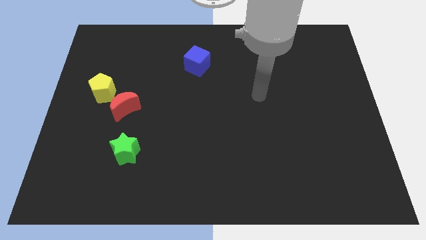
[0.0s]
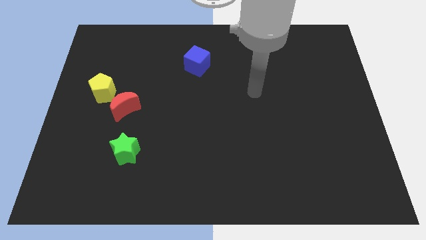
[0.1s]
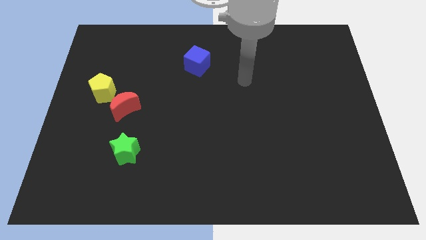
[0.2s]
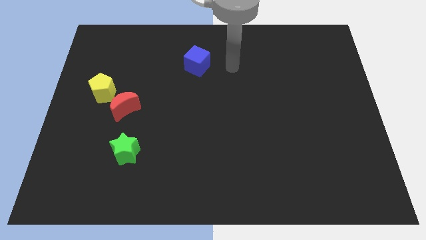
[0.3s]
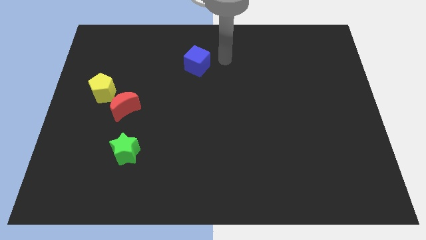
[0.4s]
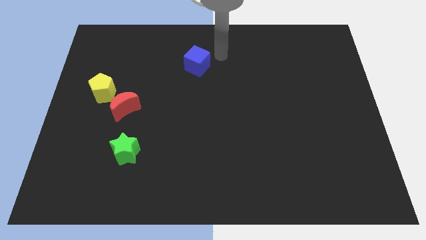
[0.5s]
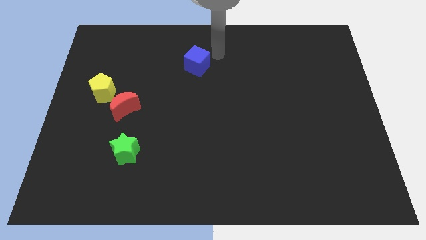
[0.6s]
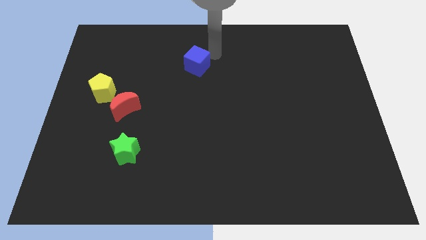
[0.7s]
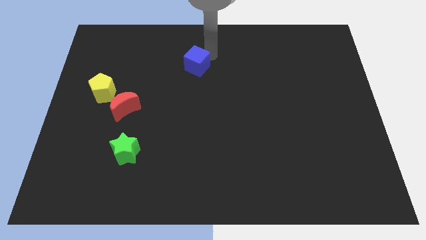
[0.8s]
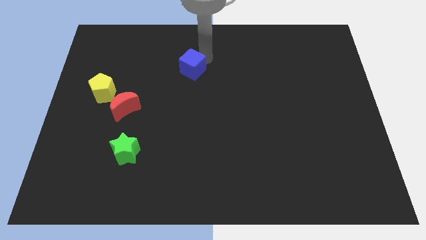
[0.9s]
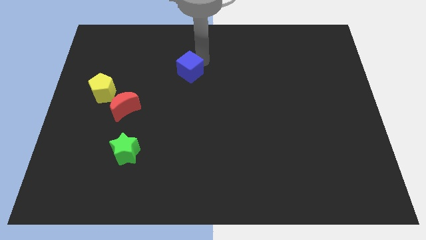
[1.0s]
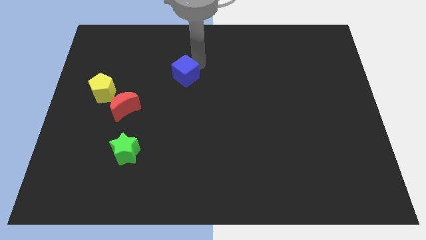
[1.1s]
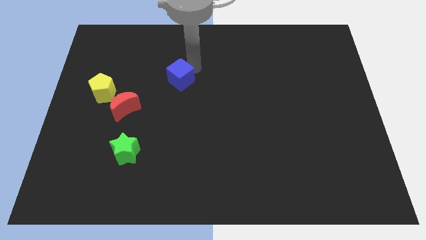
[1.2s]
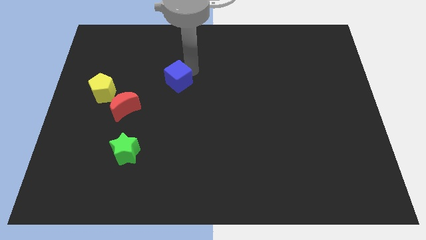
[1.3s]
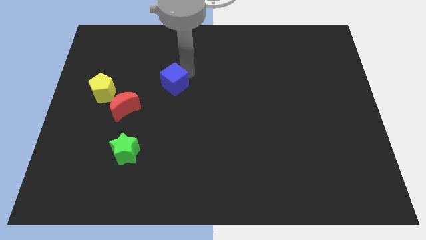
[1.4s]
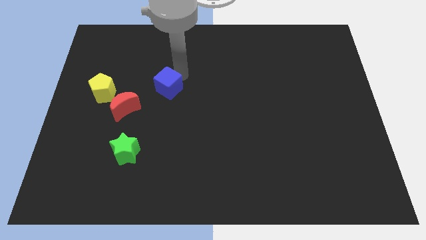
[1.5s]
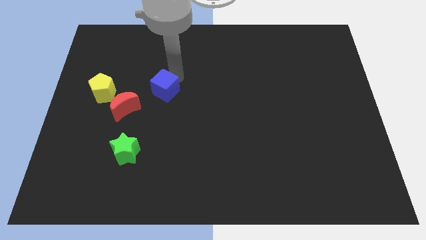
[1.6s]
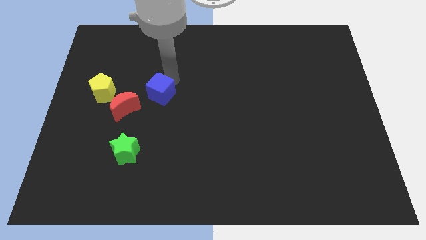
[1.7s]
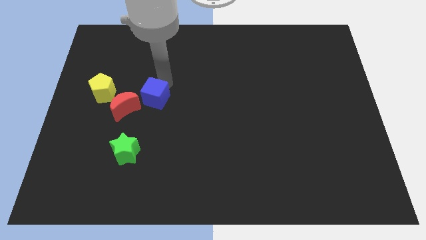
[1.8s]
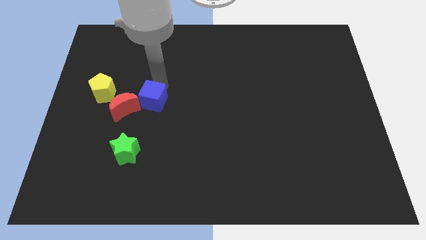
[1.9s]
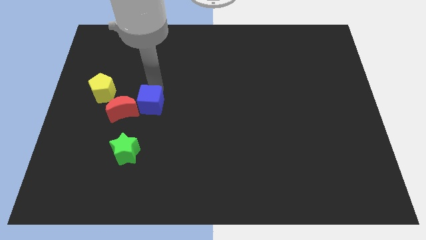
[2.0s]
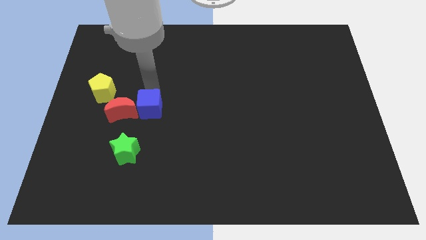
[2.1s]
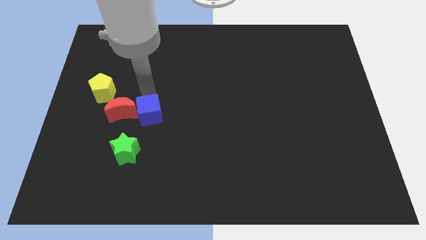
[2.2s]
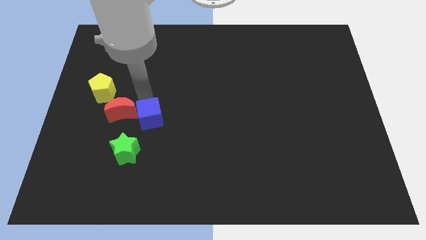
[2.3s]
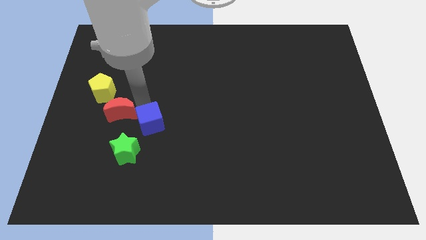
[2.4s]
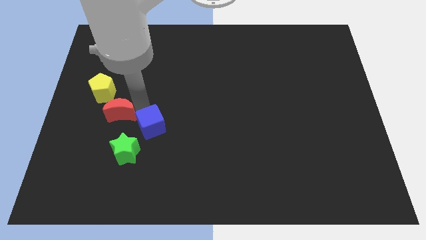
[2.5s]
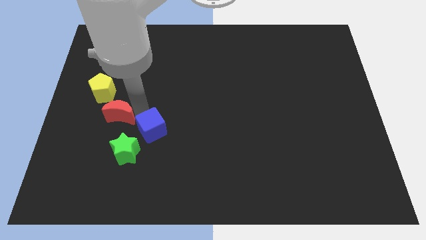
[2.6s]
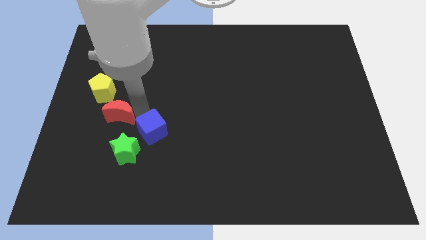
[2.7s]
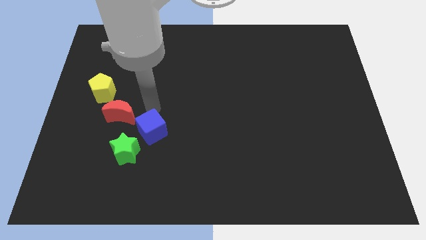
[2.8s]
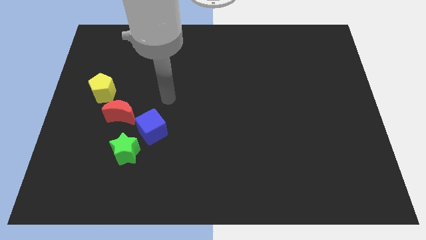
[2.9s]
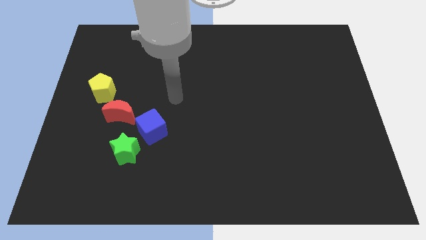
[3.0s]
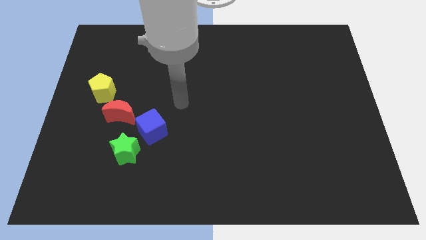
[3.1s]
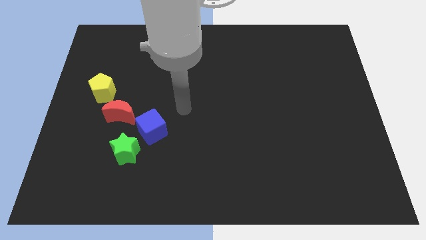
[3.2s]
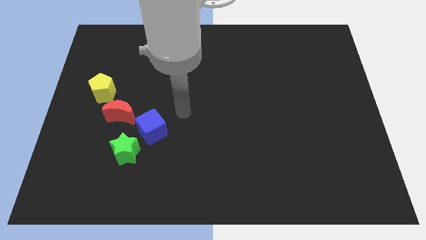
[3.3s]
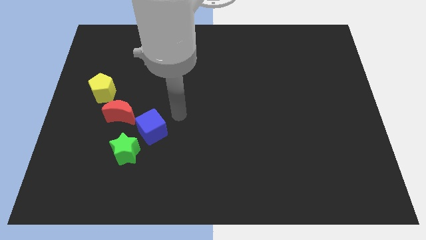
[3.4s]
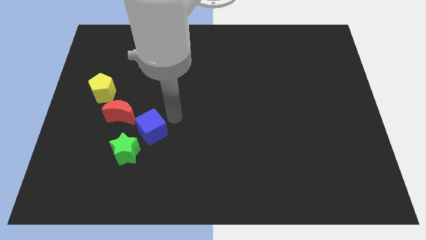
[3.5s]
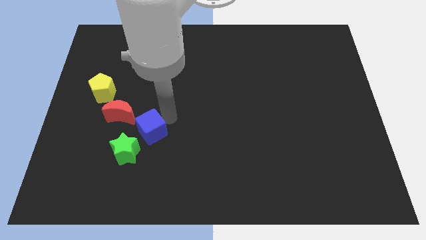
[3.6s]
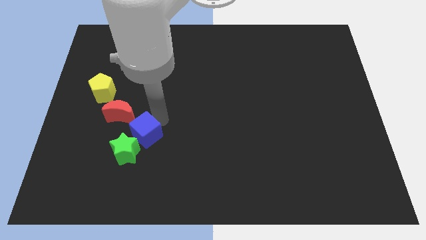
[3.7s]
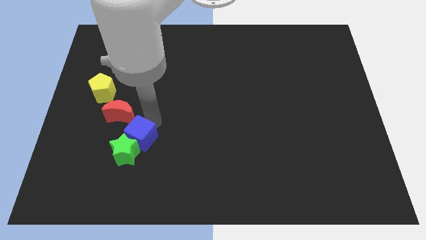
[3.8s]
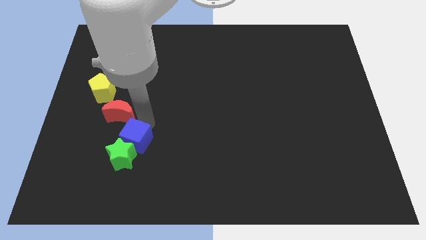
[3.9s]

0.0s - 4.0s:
push the blue block next to the green block

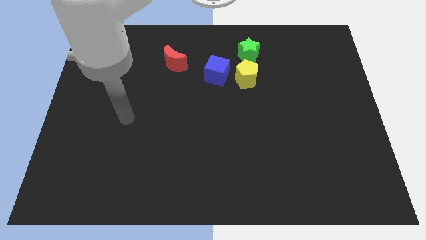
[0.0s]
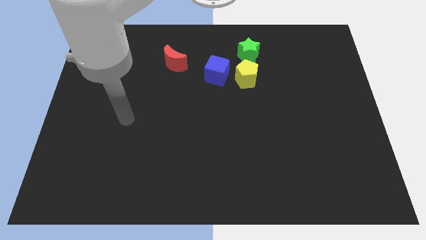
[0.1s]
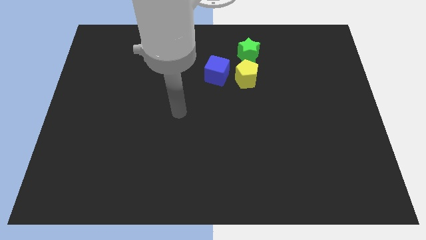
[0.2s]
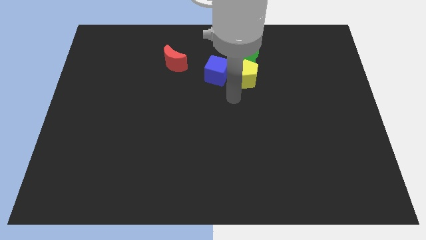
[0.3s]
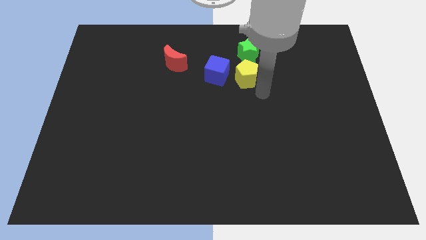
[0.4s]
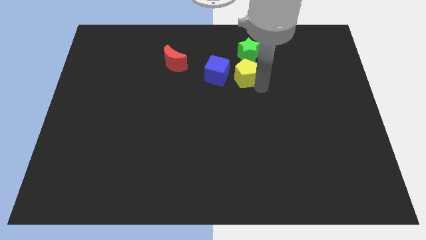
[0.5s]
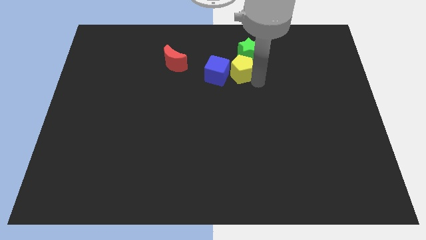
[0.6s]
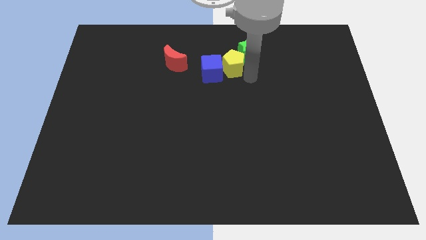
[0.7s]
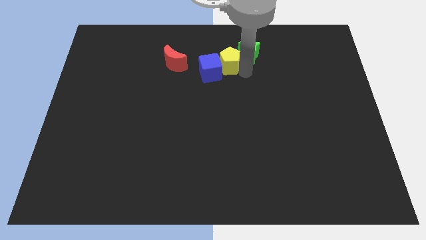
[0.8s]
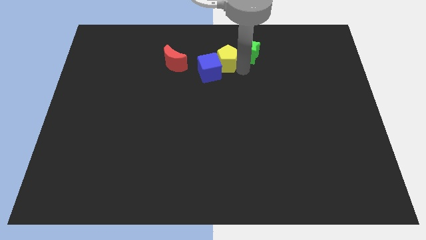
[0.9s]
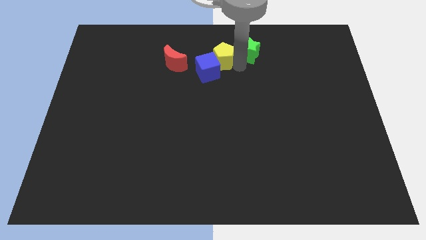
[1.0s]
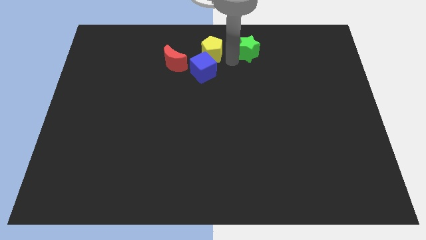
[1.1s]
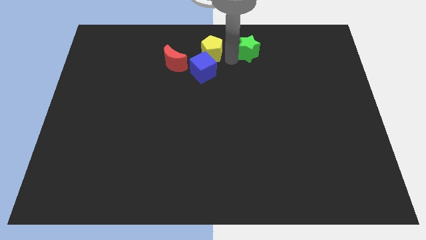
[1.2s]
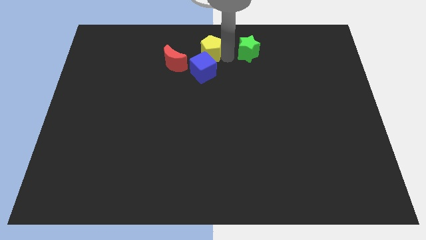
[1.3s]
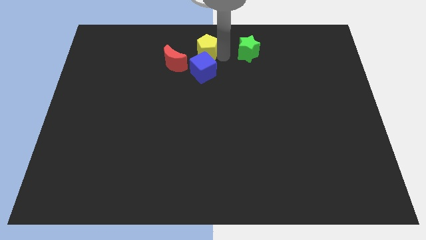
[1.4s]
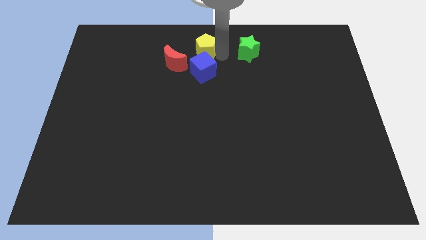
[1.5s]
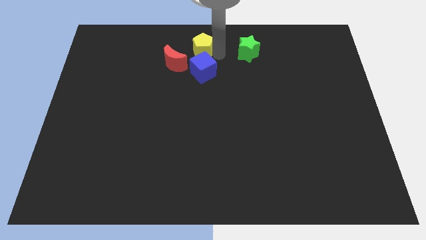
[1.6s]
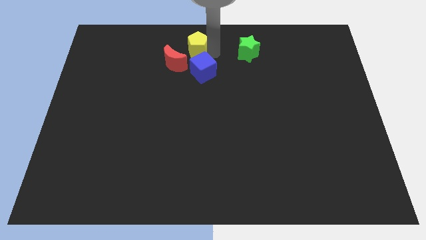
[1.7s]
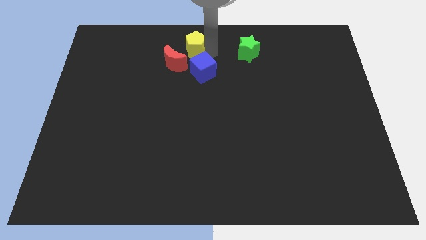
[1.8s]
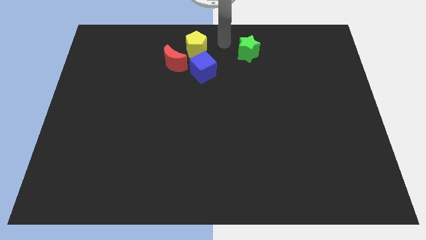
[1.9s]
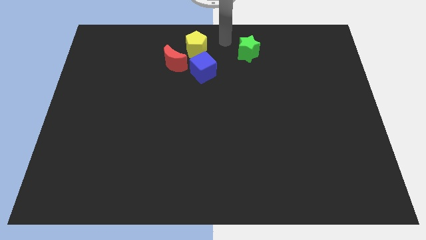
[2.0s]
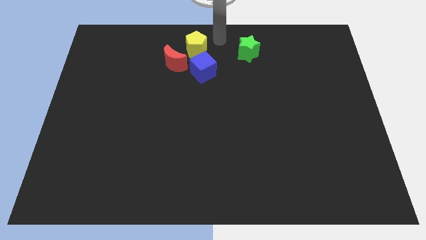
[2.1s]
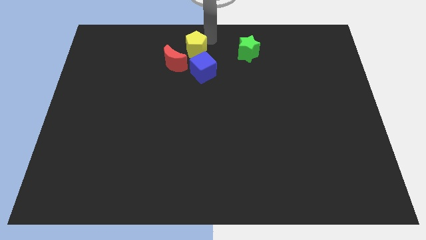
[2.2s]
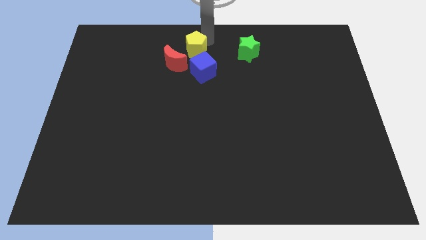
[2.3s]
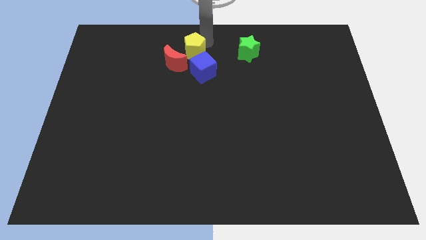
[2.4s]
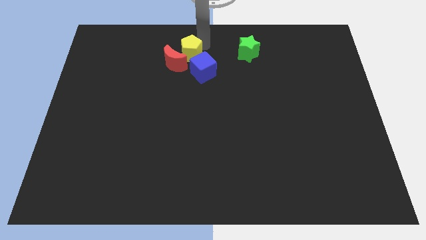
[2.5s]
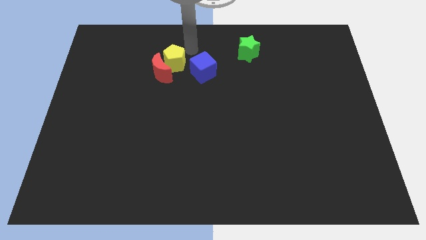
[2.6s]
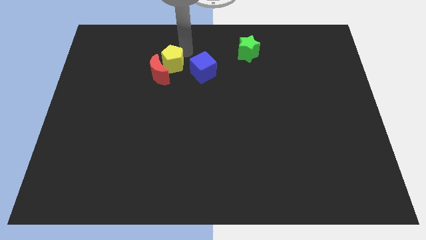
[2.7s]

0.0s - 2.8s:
move the pentagon close to the red moon

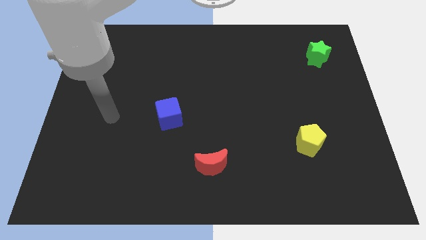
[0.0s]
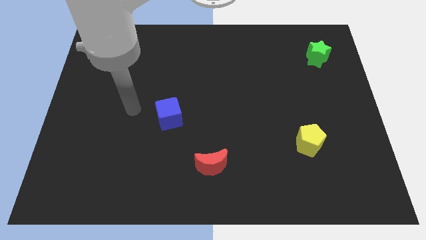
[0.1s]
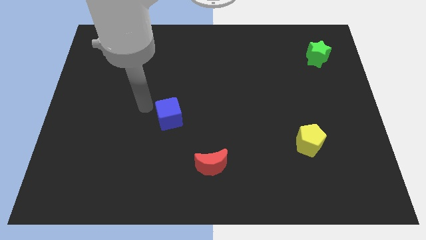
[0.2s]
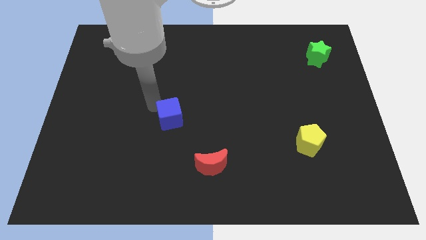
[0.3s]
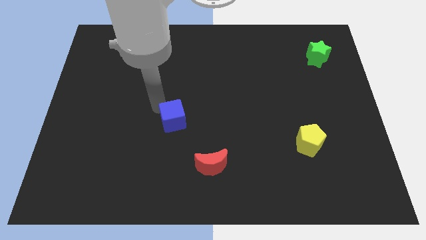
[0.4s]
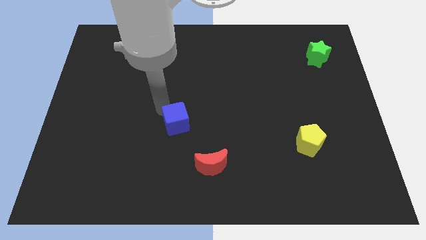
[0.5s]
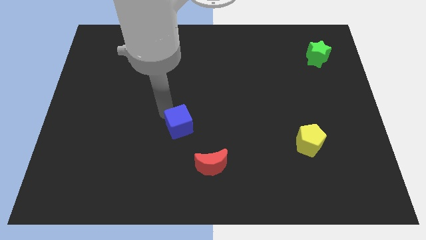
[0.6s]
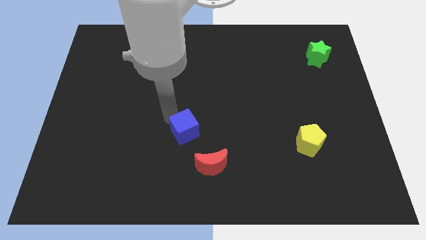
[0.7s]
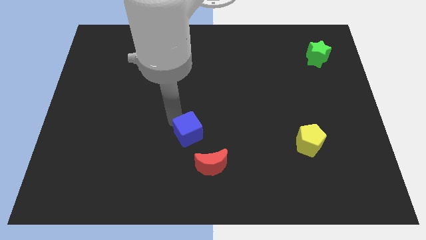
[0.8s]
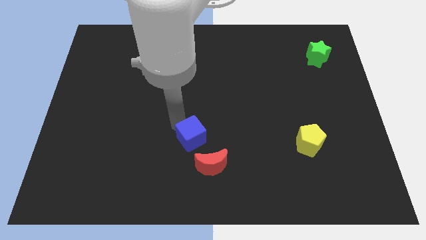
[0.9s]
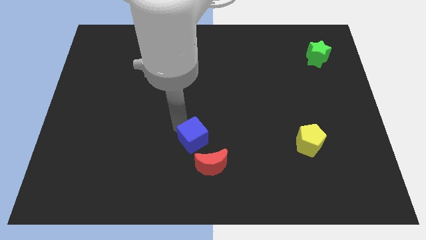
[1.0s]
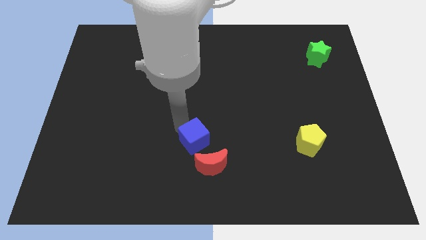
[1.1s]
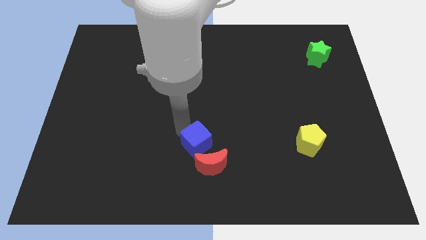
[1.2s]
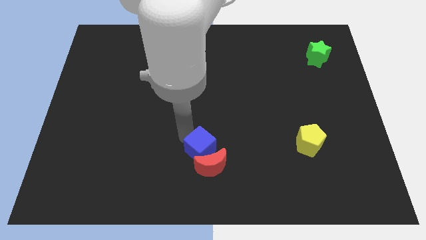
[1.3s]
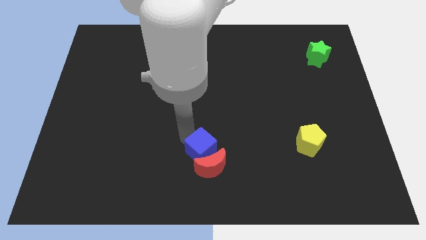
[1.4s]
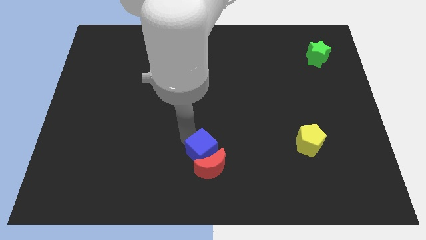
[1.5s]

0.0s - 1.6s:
move the blue cube close to the red moon

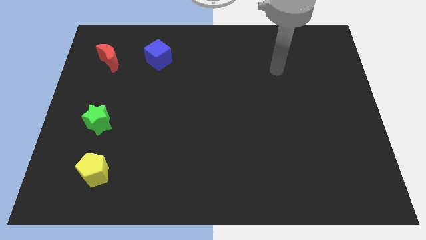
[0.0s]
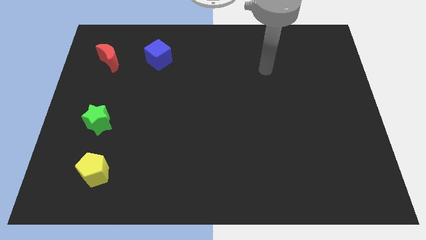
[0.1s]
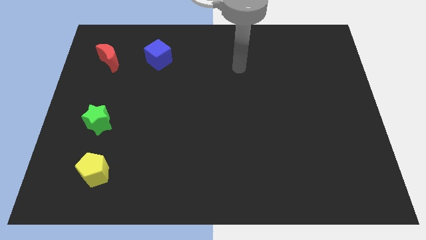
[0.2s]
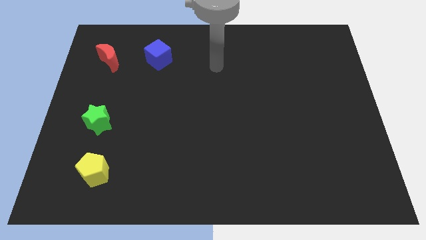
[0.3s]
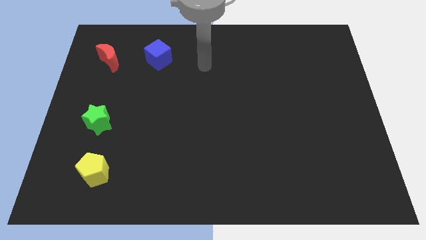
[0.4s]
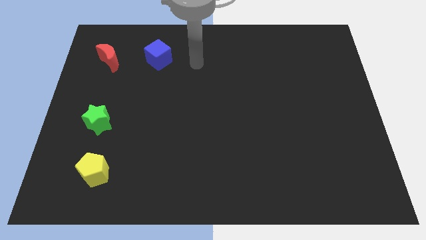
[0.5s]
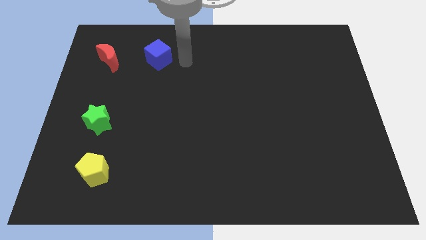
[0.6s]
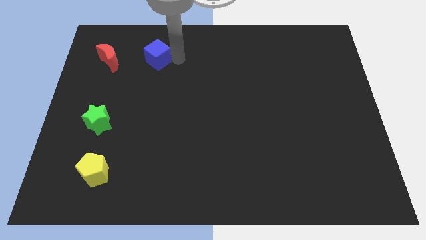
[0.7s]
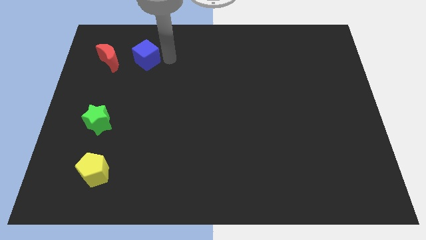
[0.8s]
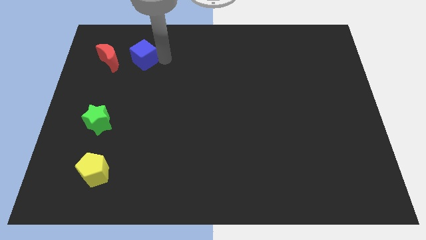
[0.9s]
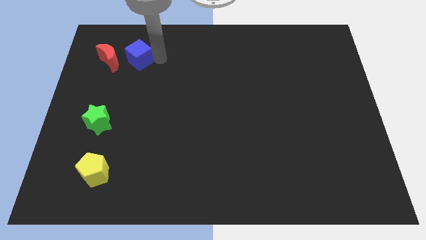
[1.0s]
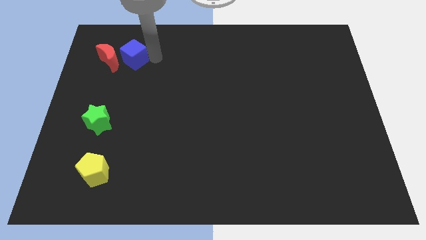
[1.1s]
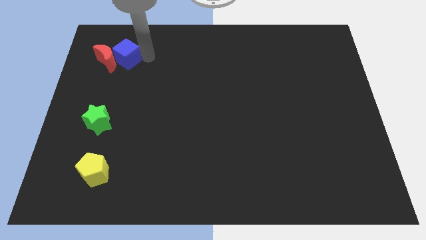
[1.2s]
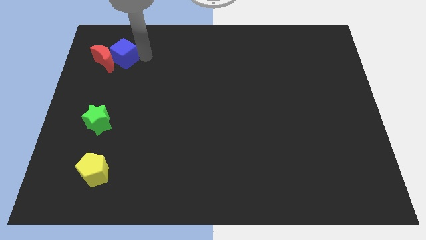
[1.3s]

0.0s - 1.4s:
put the blue cube towards the red moon
